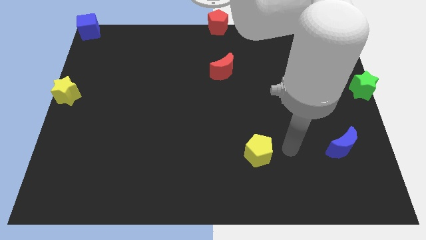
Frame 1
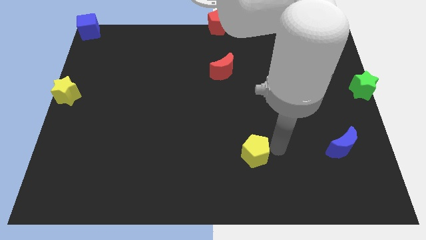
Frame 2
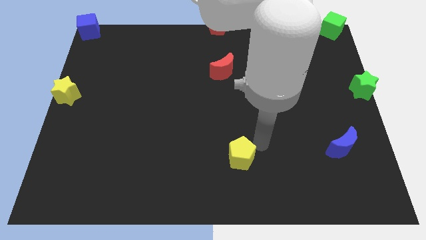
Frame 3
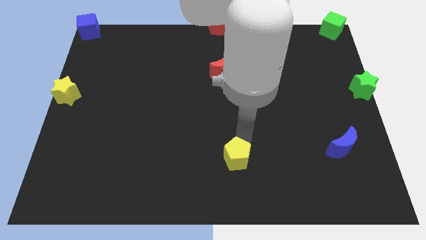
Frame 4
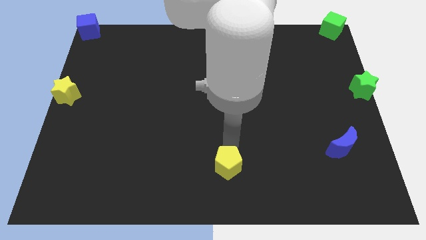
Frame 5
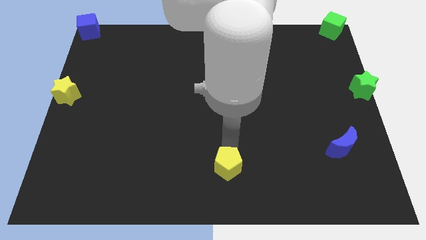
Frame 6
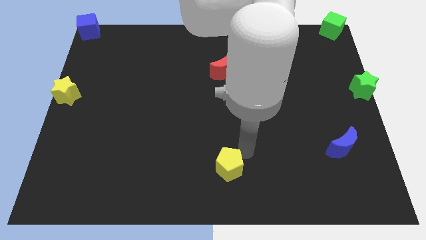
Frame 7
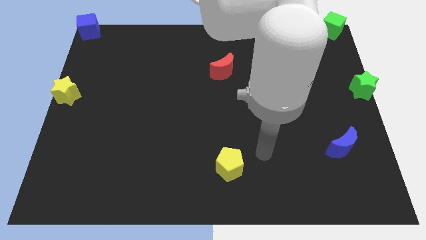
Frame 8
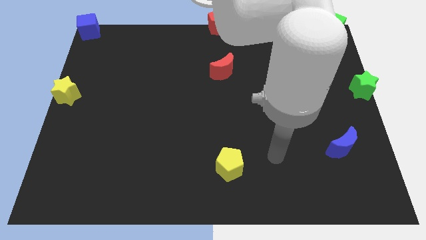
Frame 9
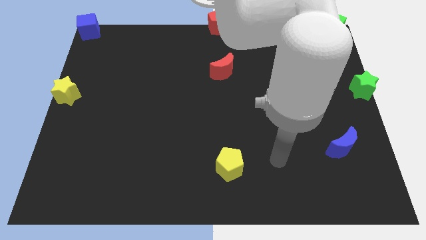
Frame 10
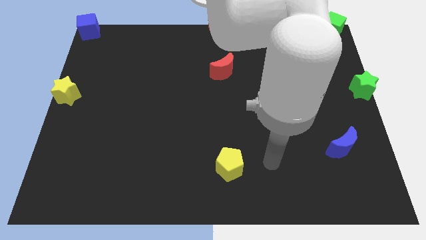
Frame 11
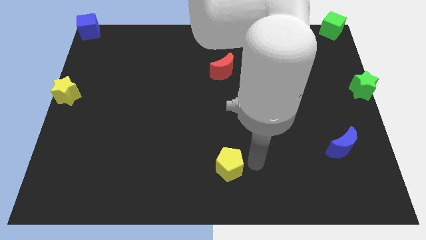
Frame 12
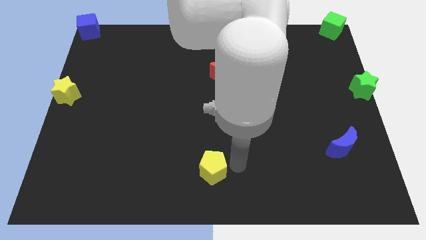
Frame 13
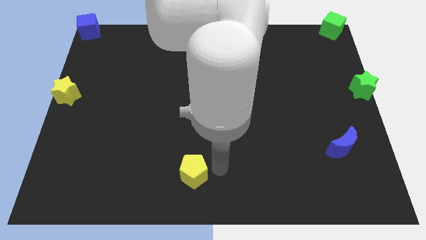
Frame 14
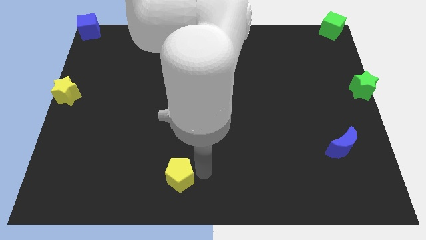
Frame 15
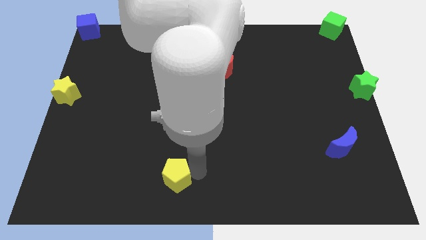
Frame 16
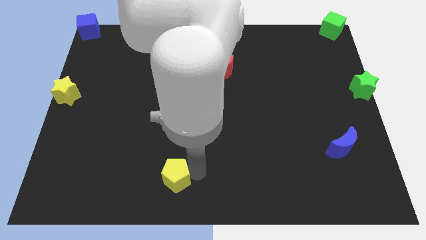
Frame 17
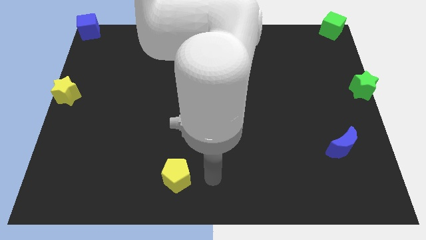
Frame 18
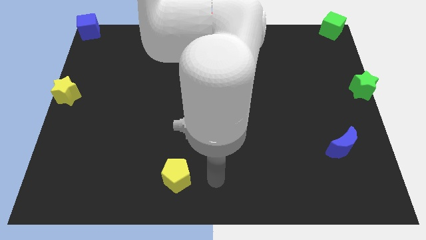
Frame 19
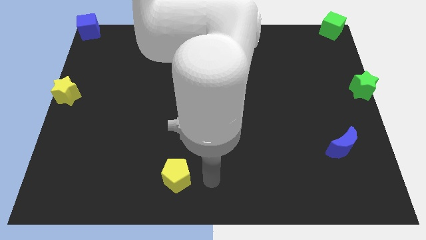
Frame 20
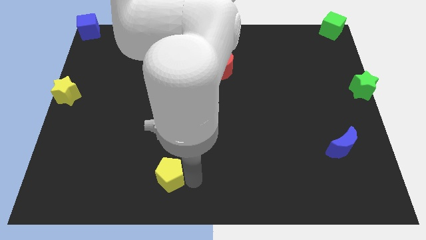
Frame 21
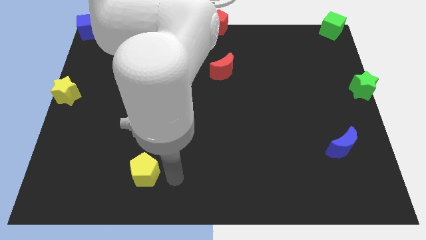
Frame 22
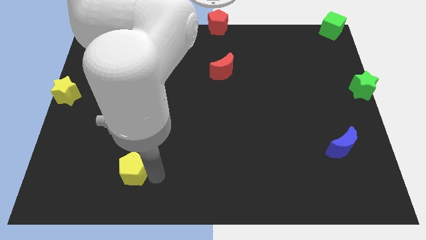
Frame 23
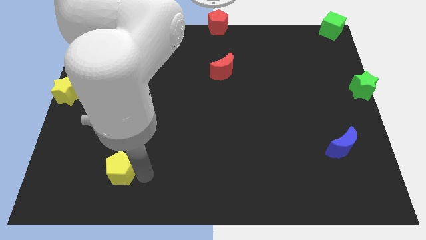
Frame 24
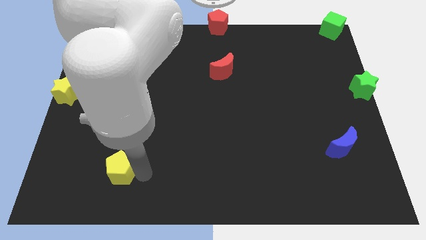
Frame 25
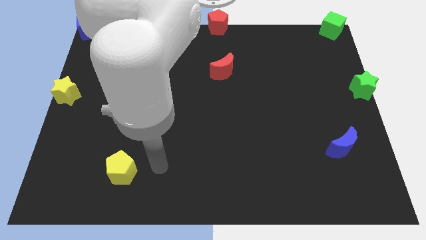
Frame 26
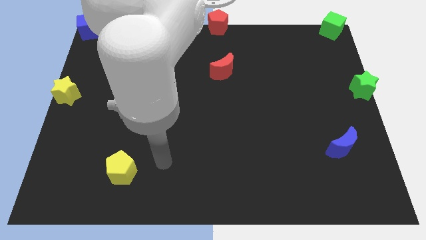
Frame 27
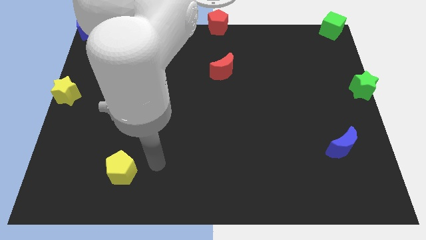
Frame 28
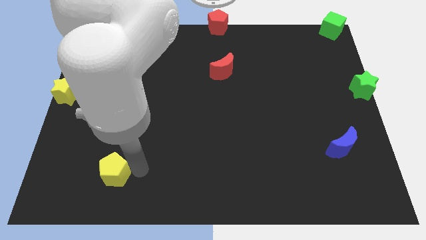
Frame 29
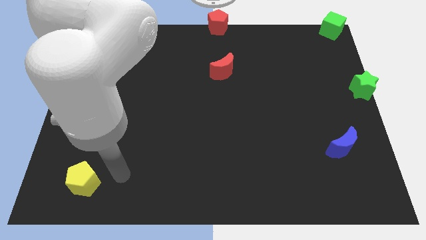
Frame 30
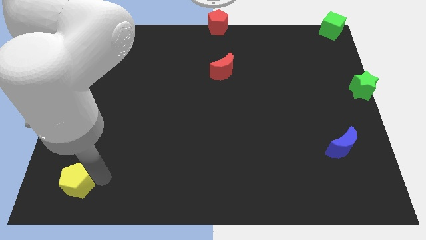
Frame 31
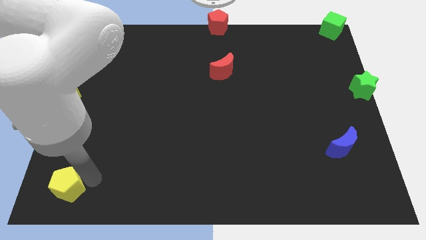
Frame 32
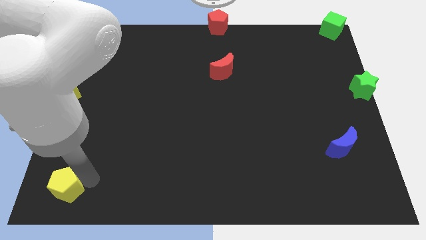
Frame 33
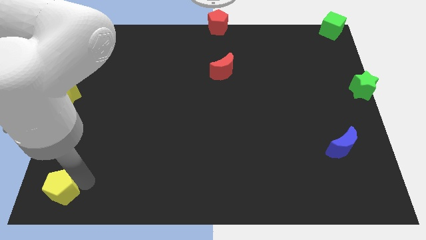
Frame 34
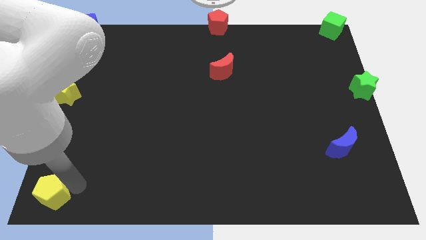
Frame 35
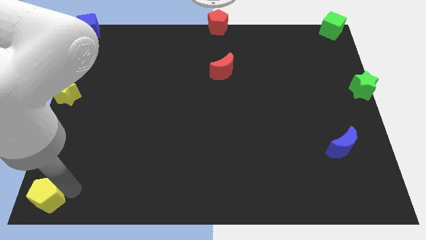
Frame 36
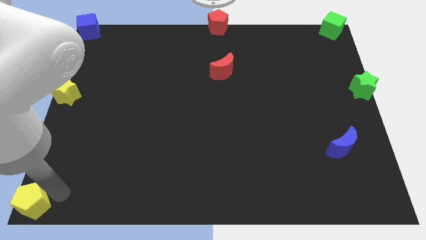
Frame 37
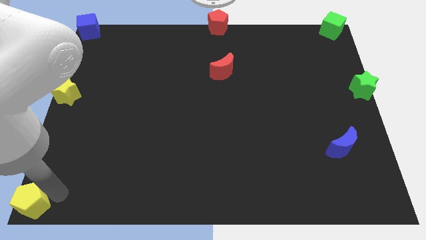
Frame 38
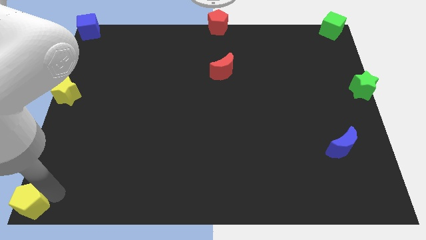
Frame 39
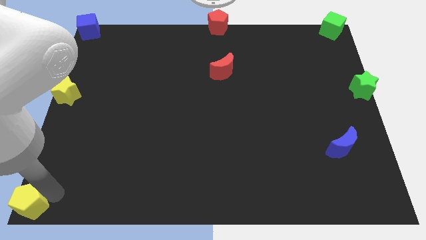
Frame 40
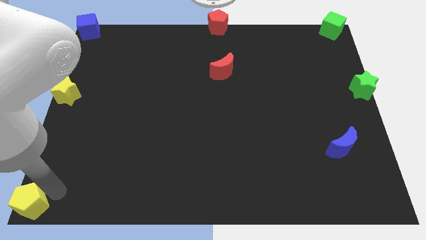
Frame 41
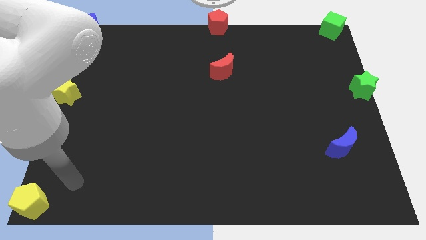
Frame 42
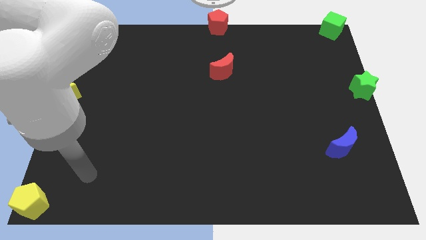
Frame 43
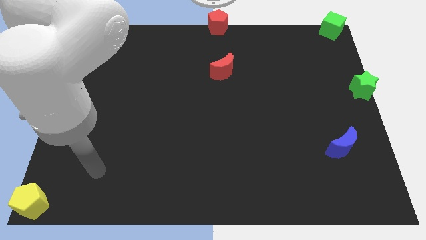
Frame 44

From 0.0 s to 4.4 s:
push the yellow pentagon bottom left corner of the yellow pentagon

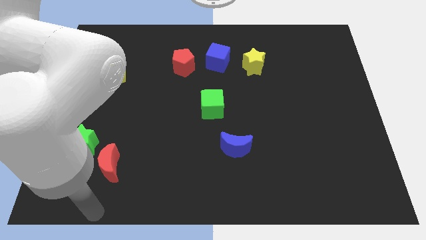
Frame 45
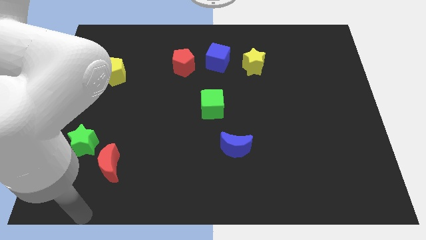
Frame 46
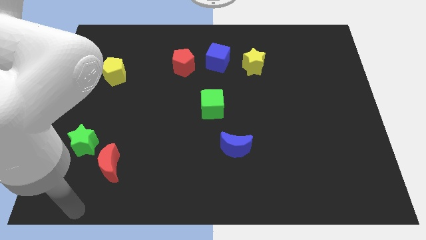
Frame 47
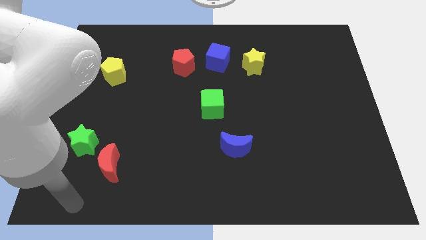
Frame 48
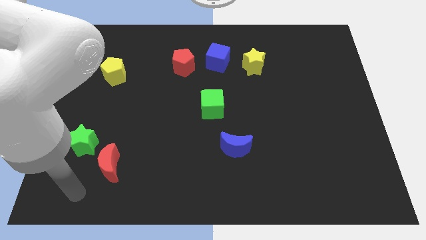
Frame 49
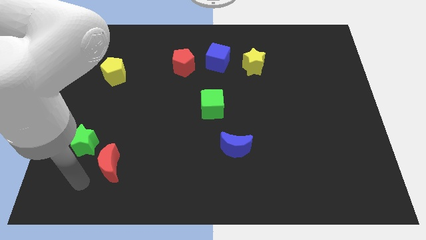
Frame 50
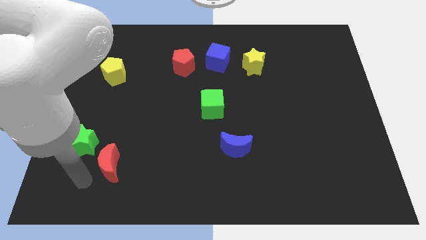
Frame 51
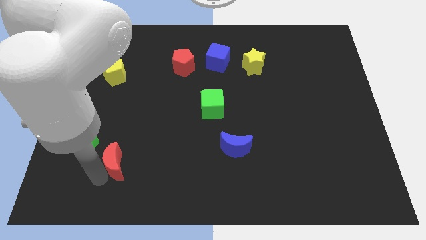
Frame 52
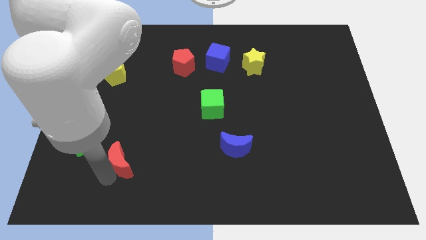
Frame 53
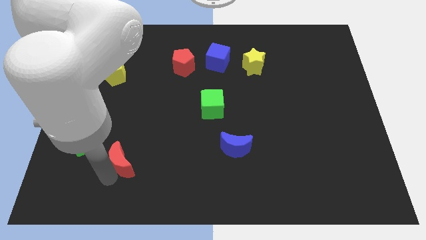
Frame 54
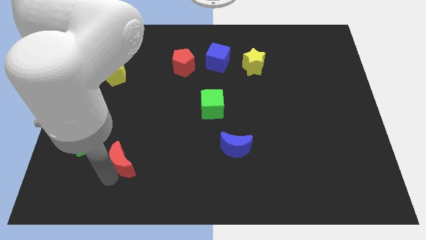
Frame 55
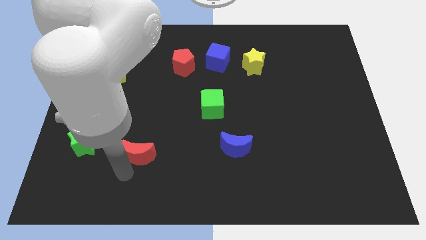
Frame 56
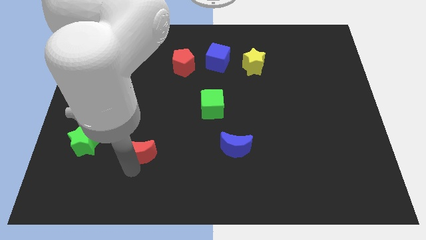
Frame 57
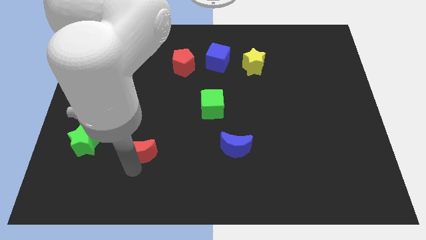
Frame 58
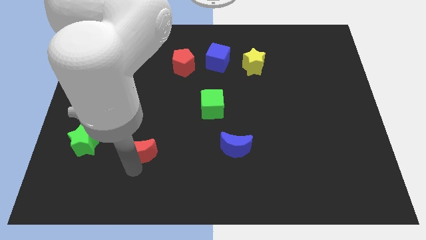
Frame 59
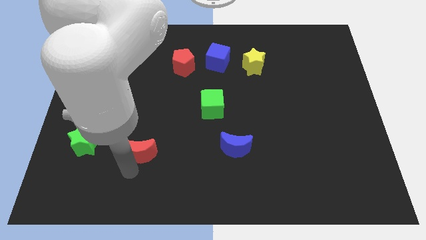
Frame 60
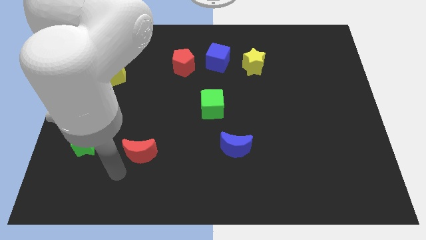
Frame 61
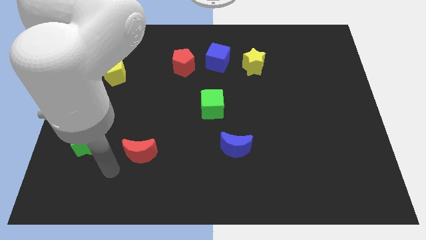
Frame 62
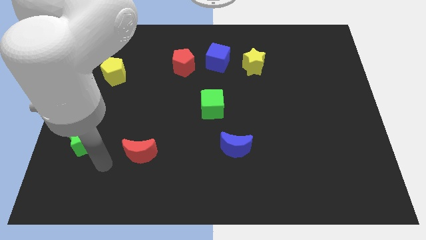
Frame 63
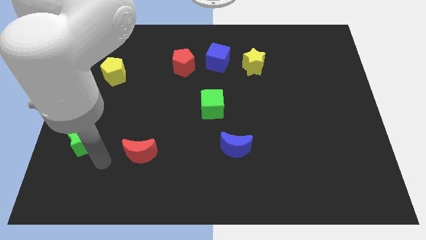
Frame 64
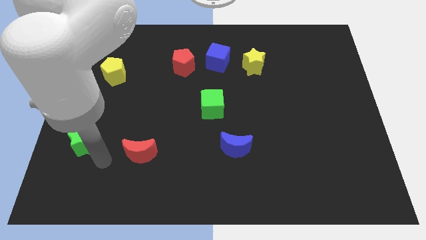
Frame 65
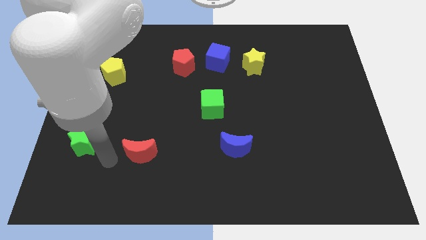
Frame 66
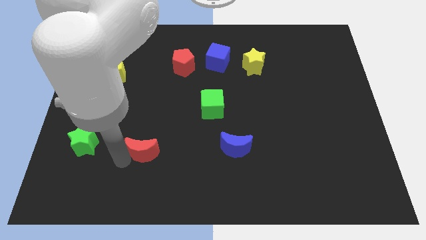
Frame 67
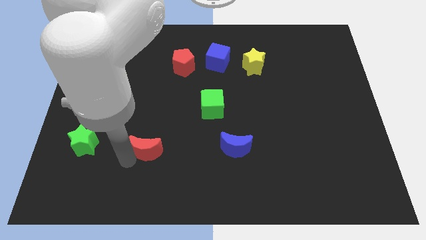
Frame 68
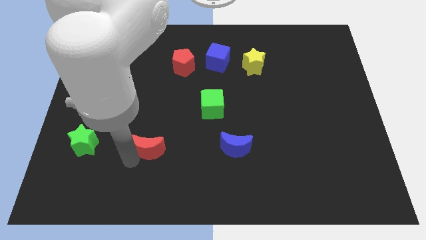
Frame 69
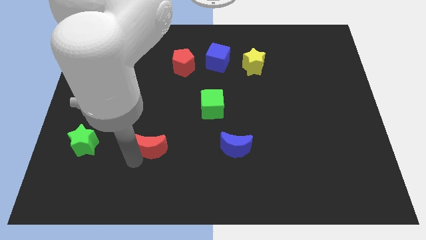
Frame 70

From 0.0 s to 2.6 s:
move the red moon parallel to blue moon

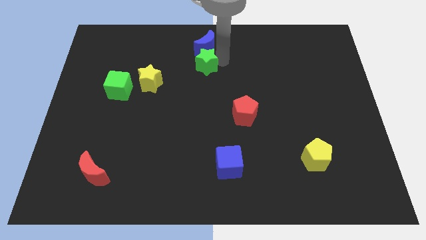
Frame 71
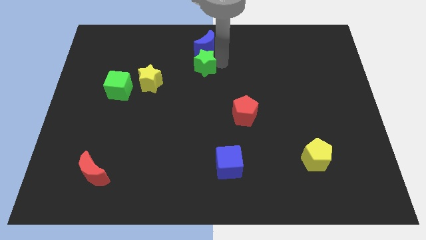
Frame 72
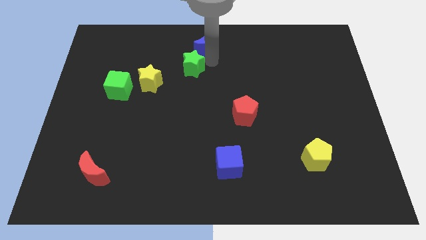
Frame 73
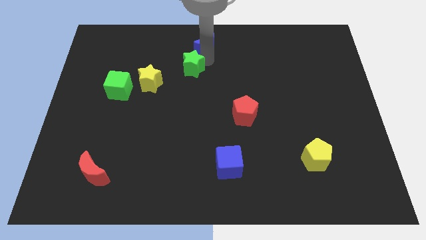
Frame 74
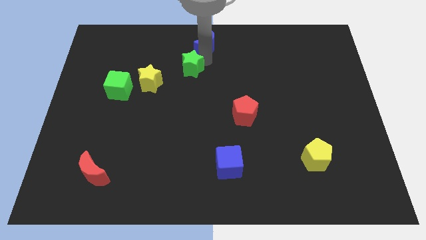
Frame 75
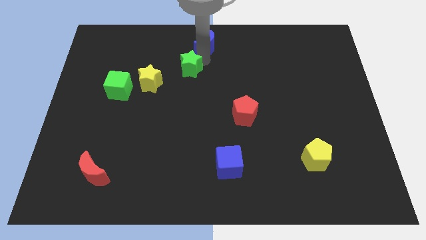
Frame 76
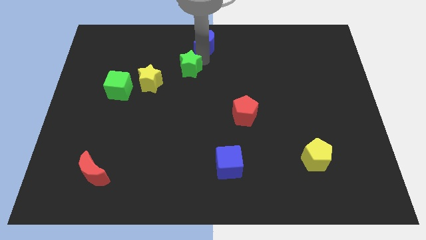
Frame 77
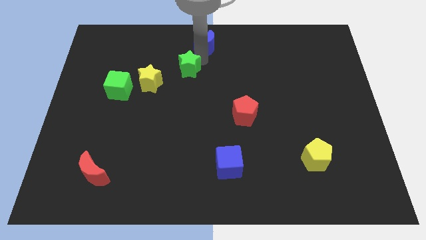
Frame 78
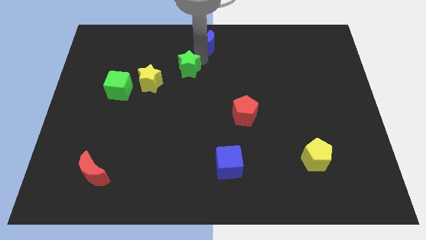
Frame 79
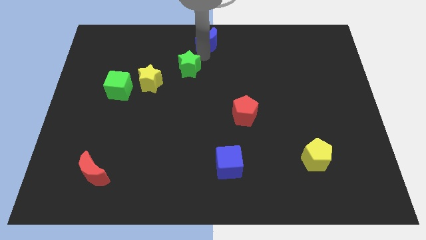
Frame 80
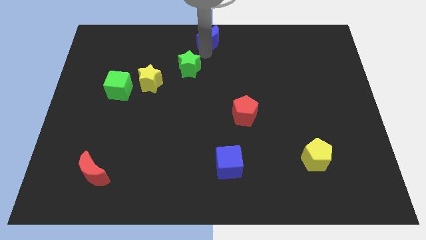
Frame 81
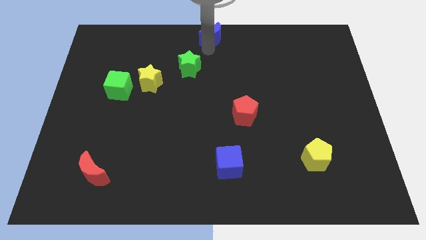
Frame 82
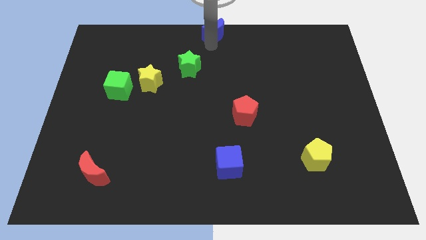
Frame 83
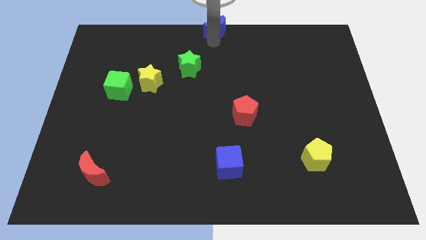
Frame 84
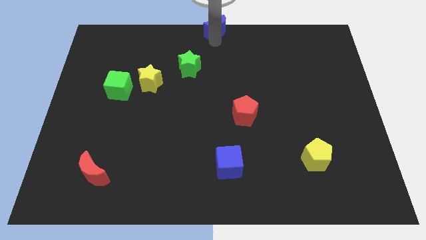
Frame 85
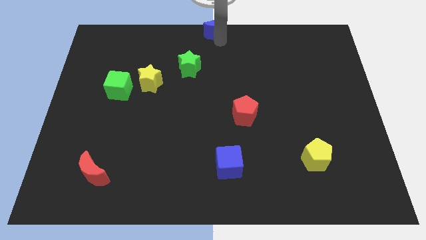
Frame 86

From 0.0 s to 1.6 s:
push the blue crescent at the top center of the board

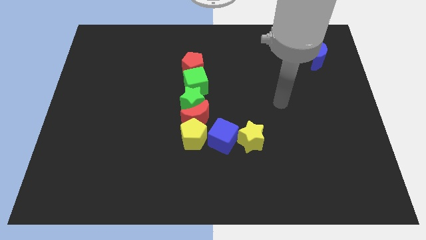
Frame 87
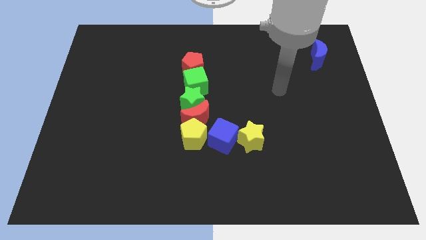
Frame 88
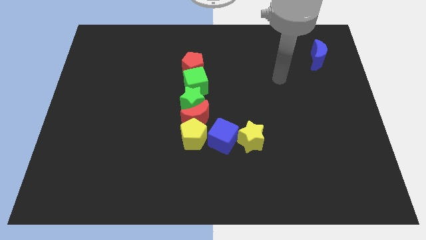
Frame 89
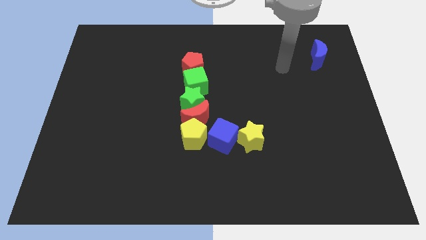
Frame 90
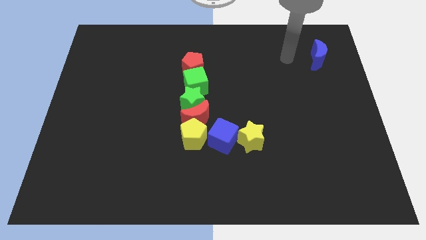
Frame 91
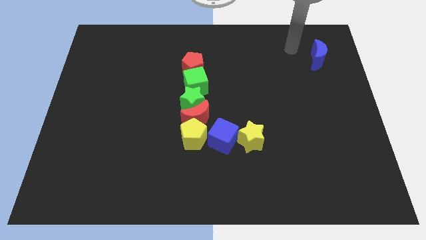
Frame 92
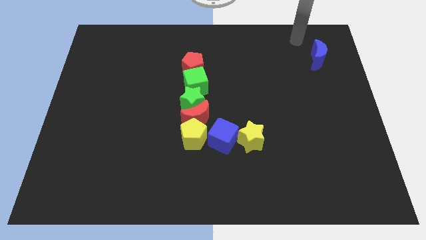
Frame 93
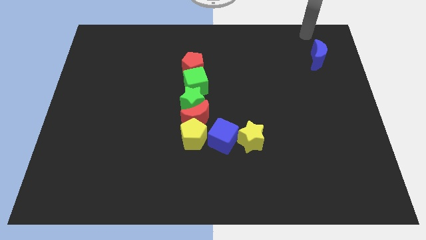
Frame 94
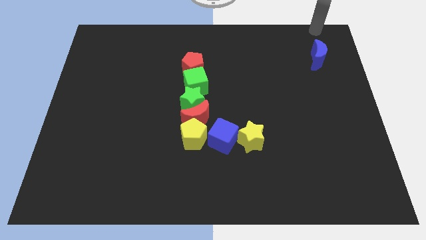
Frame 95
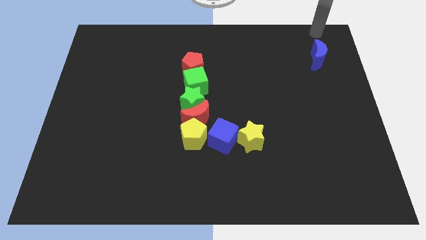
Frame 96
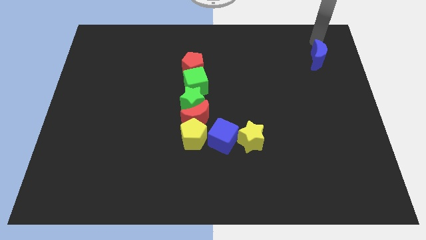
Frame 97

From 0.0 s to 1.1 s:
put your arm at the top side of the blue moon
